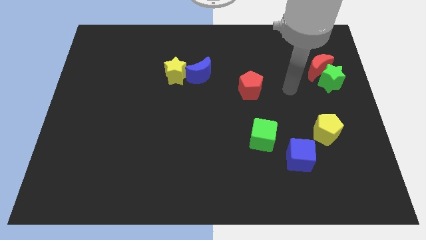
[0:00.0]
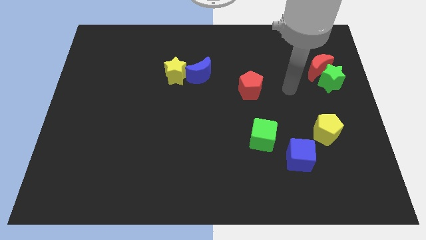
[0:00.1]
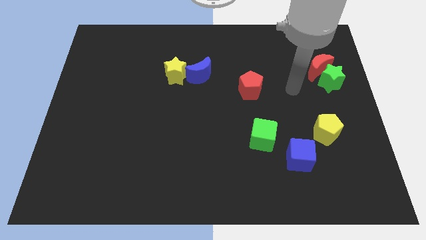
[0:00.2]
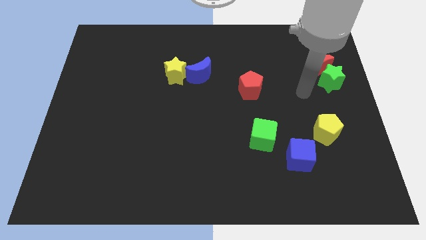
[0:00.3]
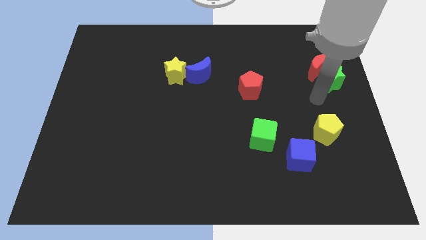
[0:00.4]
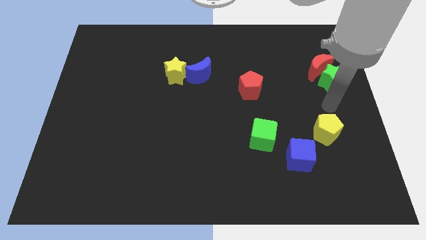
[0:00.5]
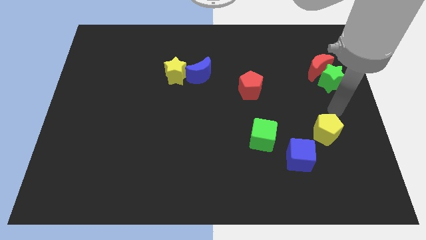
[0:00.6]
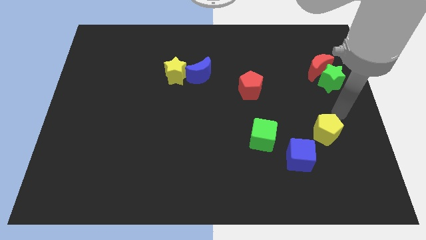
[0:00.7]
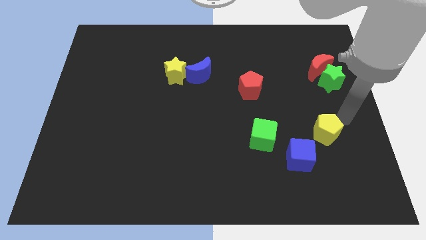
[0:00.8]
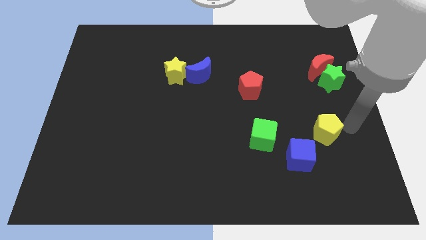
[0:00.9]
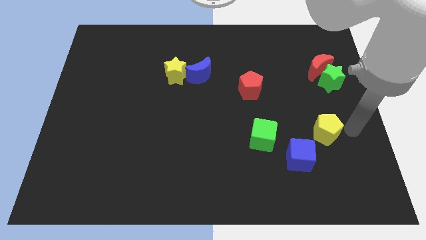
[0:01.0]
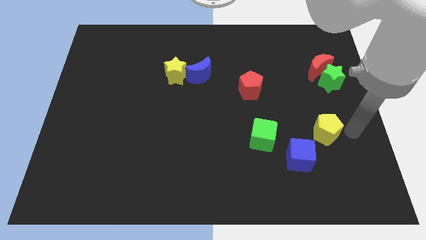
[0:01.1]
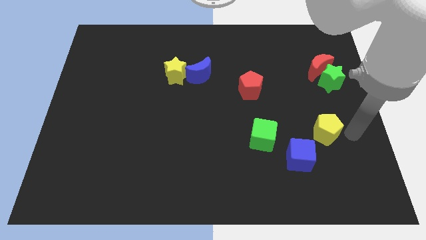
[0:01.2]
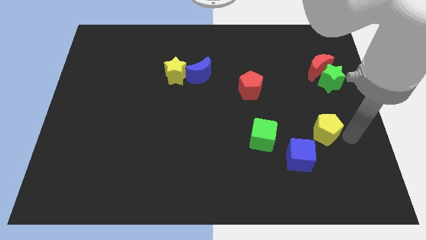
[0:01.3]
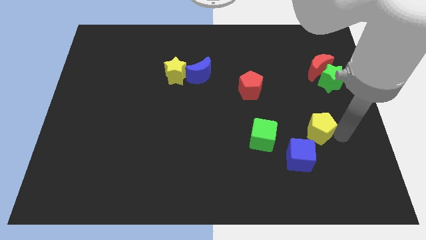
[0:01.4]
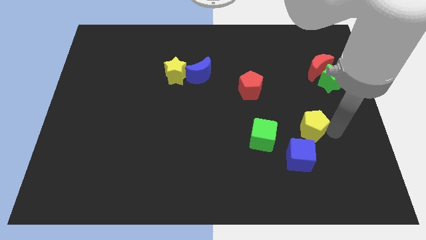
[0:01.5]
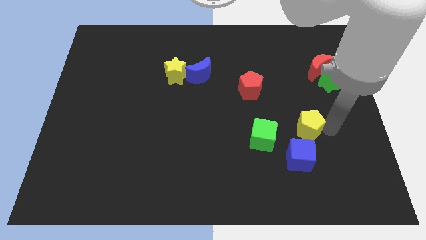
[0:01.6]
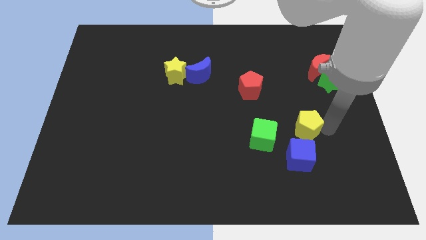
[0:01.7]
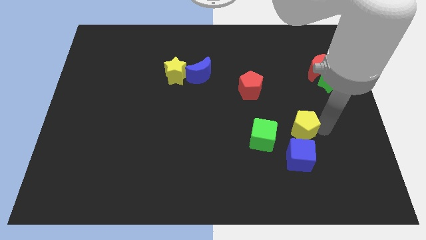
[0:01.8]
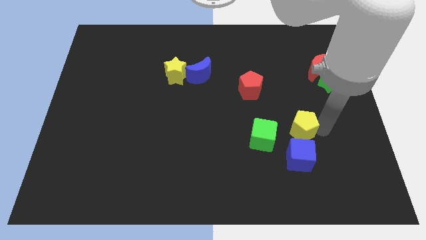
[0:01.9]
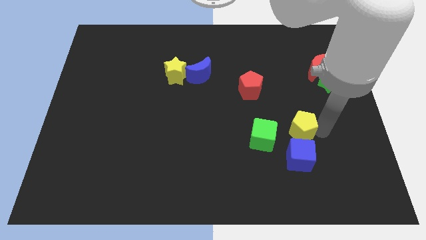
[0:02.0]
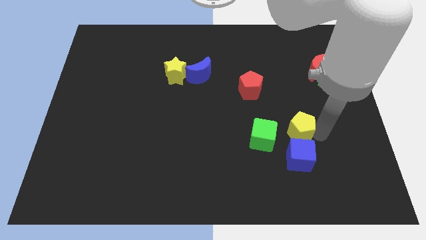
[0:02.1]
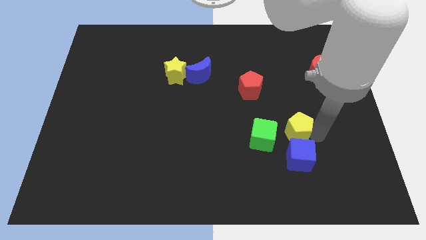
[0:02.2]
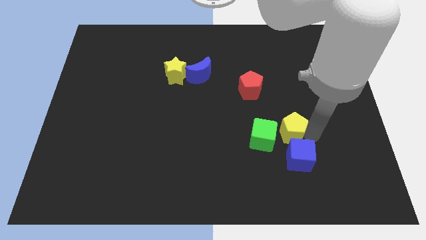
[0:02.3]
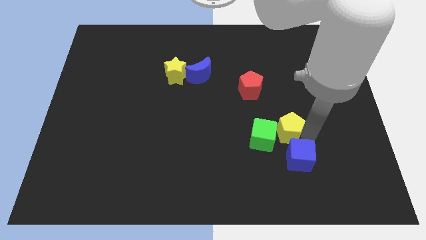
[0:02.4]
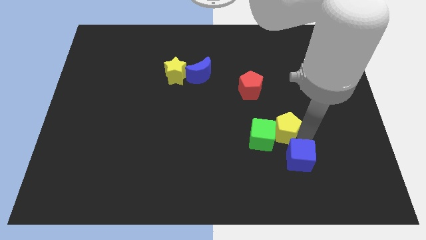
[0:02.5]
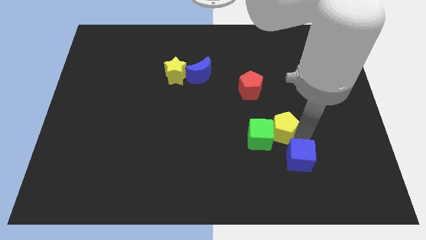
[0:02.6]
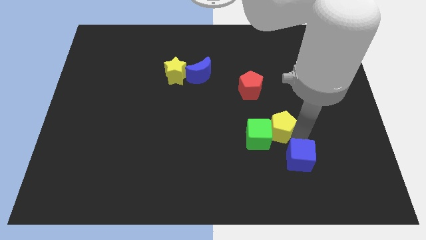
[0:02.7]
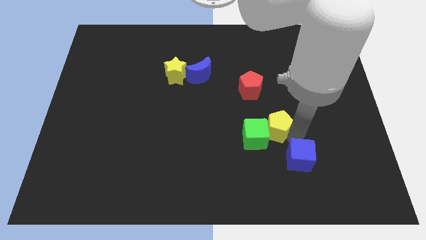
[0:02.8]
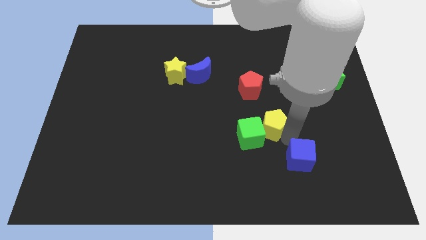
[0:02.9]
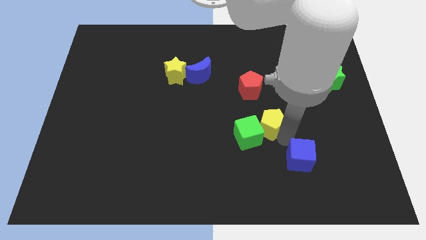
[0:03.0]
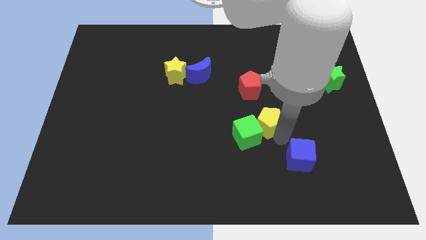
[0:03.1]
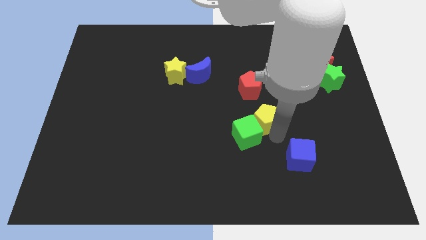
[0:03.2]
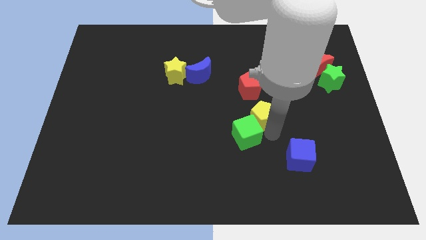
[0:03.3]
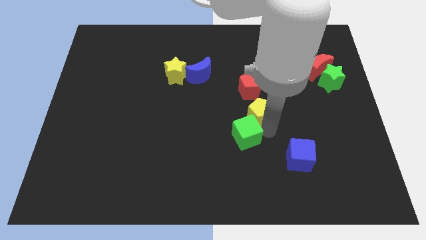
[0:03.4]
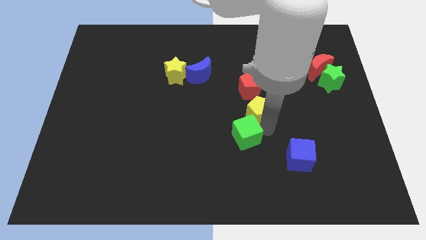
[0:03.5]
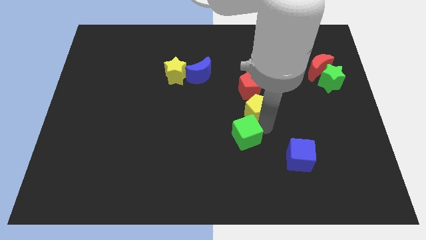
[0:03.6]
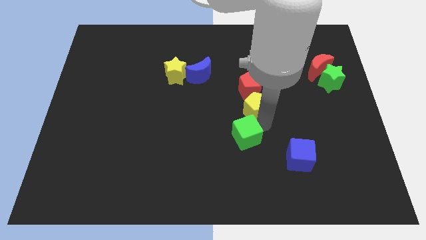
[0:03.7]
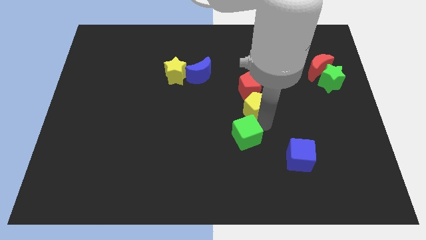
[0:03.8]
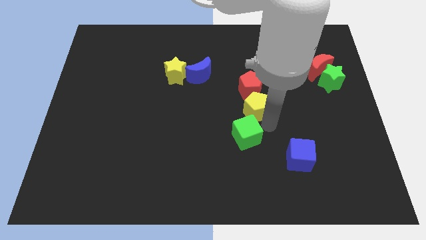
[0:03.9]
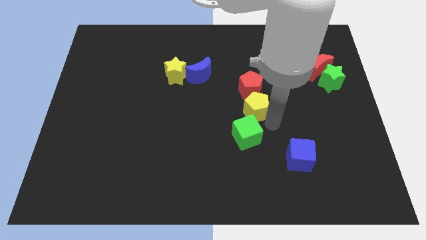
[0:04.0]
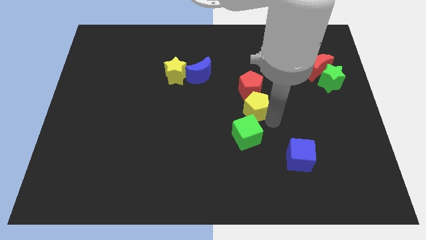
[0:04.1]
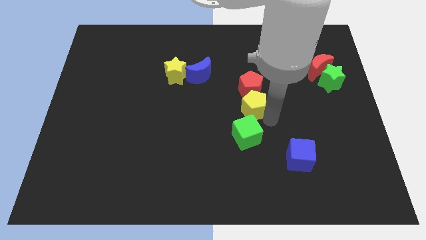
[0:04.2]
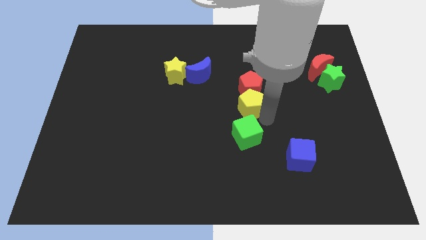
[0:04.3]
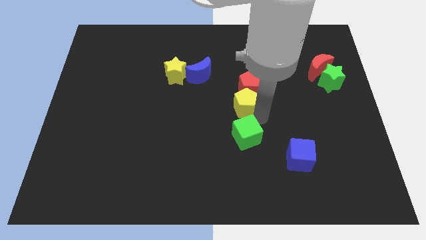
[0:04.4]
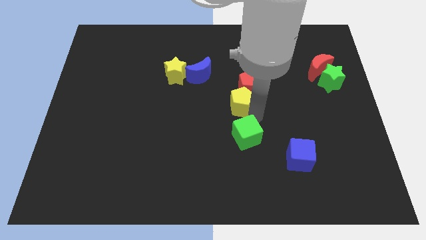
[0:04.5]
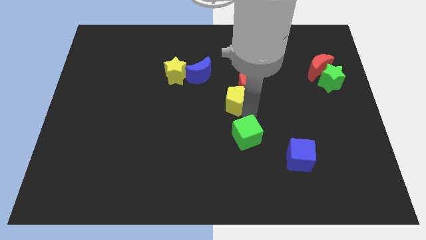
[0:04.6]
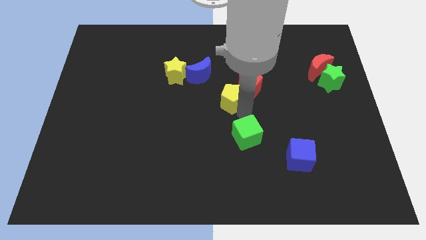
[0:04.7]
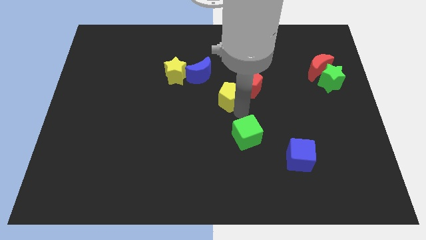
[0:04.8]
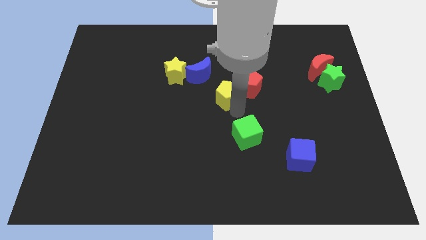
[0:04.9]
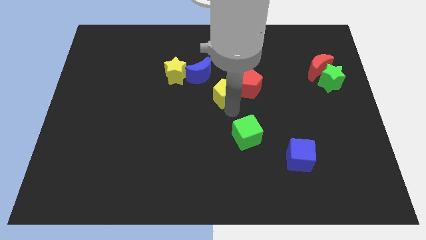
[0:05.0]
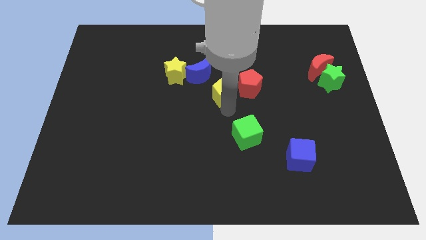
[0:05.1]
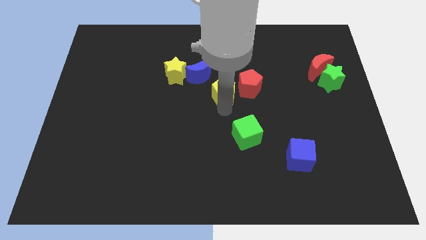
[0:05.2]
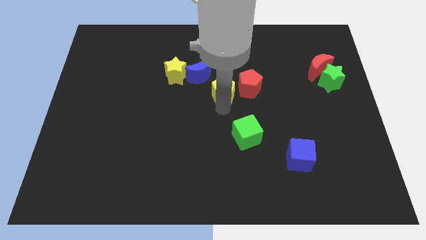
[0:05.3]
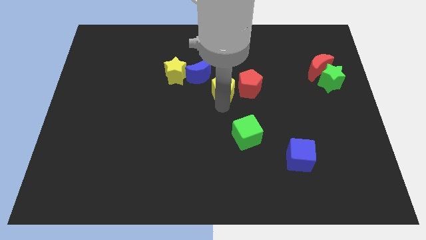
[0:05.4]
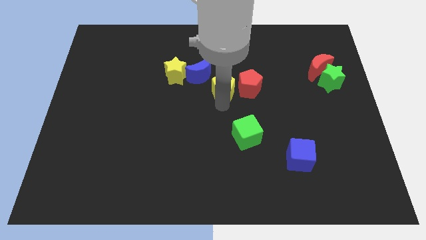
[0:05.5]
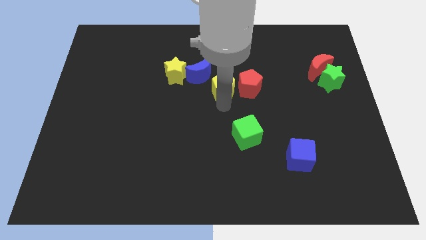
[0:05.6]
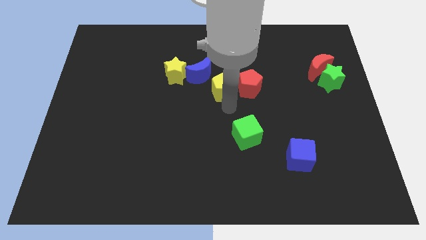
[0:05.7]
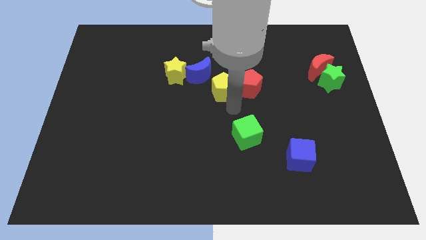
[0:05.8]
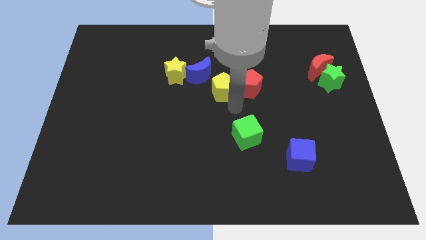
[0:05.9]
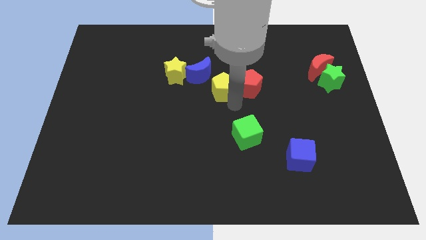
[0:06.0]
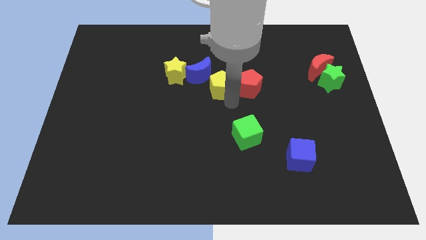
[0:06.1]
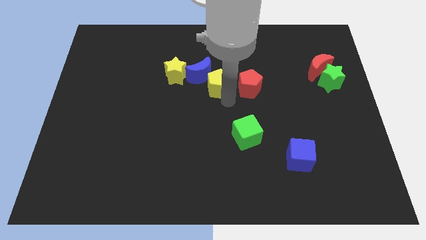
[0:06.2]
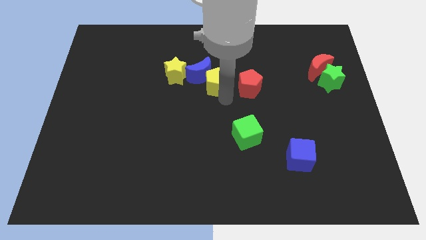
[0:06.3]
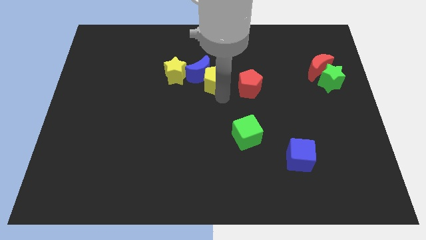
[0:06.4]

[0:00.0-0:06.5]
put the yellow pentagon to the blue moon

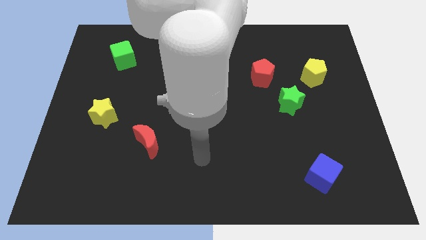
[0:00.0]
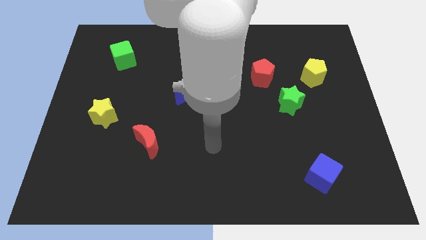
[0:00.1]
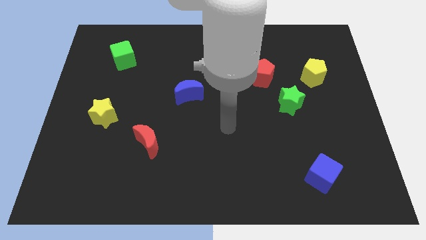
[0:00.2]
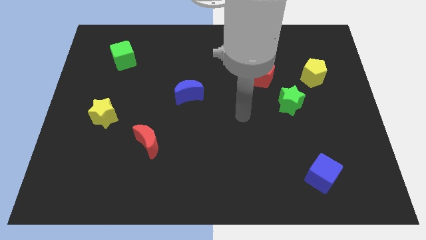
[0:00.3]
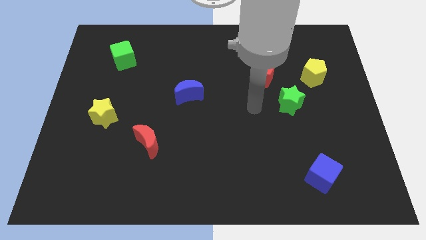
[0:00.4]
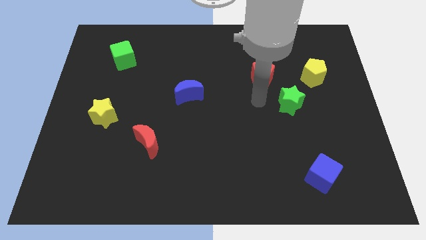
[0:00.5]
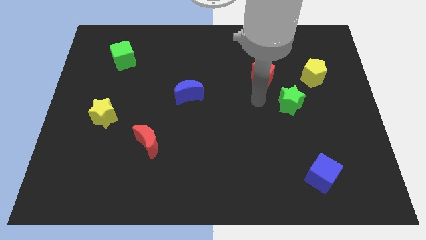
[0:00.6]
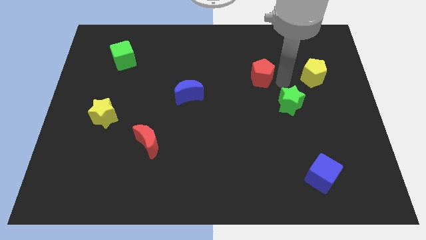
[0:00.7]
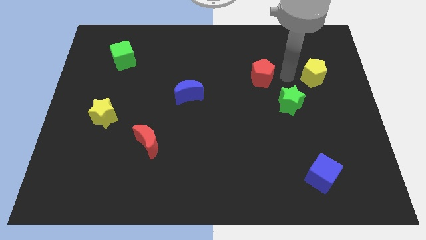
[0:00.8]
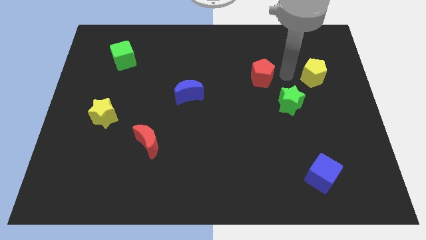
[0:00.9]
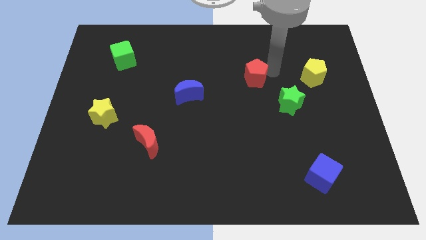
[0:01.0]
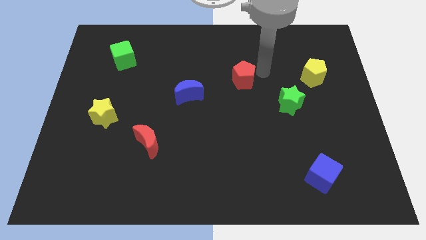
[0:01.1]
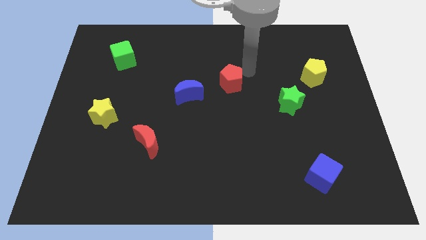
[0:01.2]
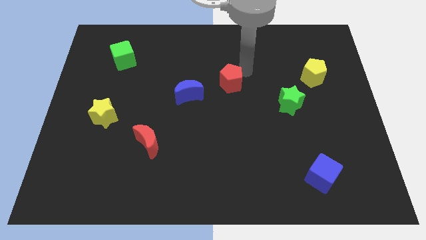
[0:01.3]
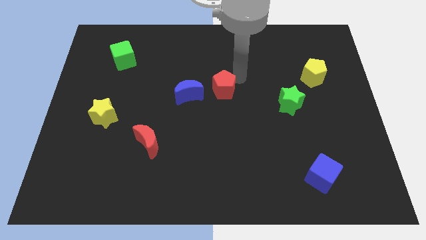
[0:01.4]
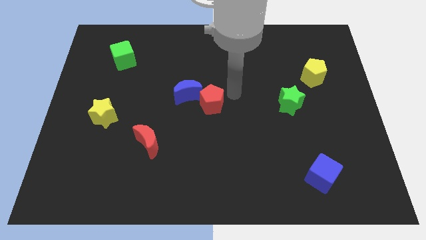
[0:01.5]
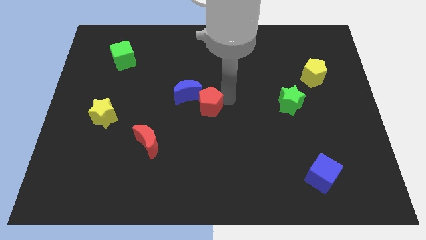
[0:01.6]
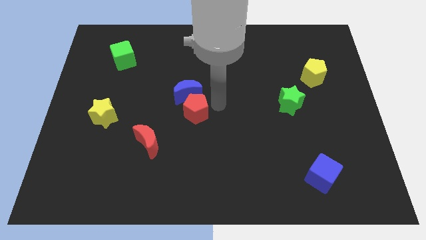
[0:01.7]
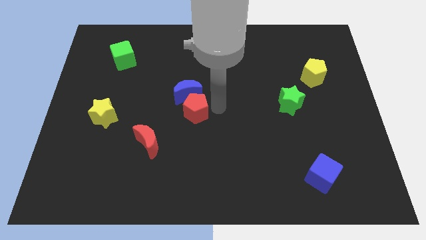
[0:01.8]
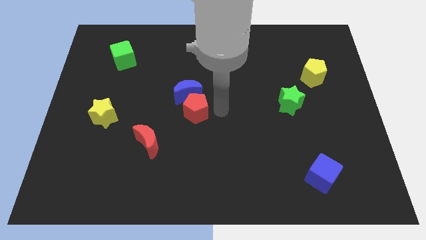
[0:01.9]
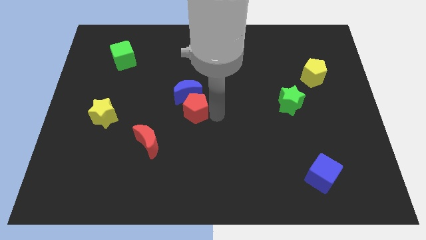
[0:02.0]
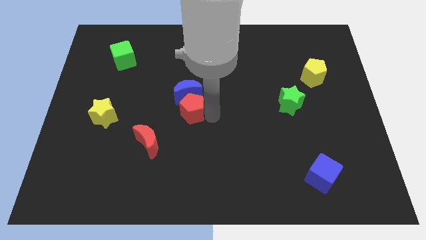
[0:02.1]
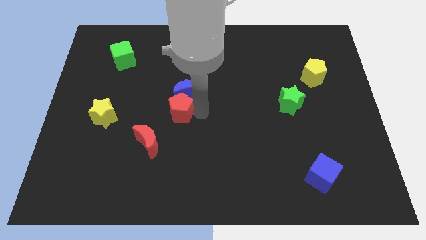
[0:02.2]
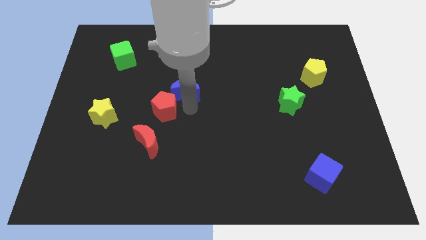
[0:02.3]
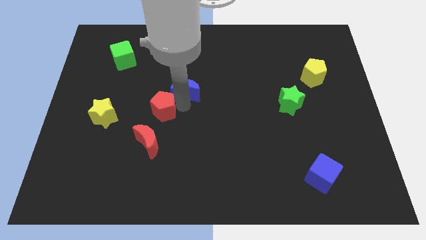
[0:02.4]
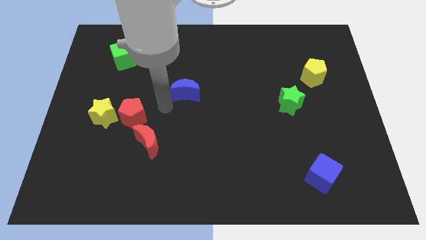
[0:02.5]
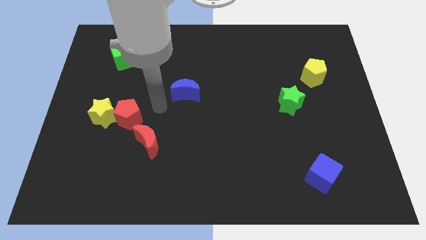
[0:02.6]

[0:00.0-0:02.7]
push the red pentagon towards the yellow star
